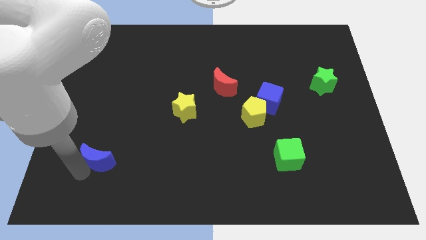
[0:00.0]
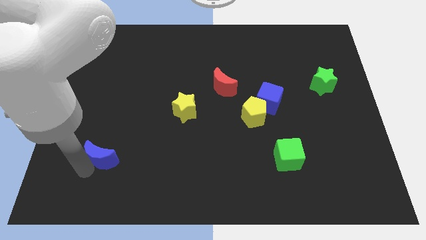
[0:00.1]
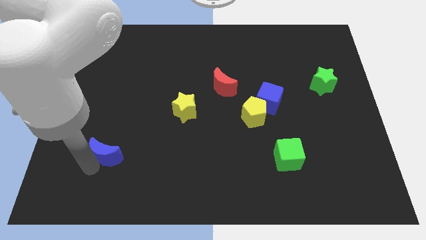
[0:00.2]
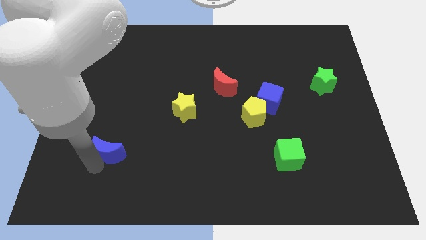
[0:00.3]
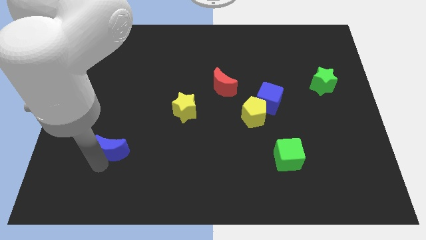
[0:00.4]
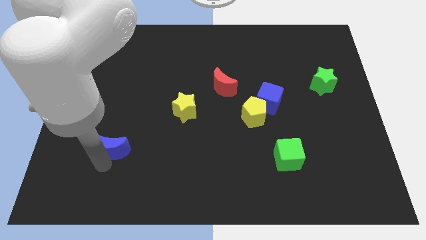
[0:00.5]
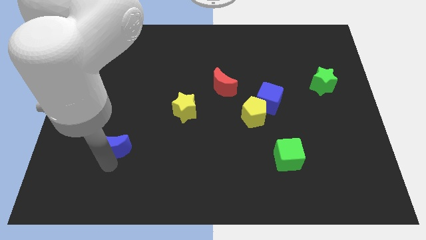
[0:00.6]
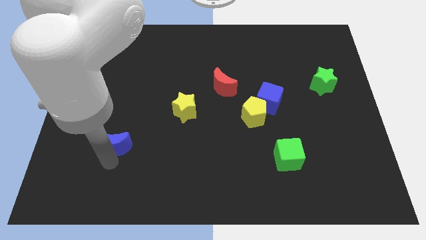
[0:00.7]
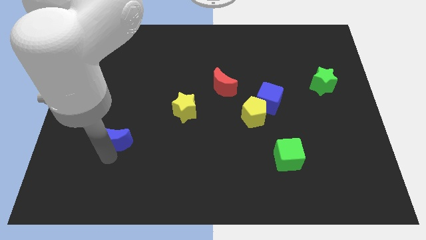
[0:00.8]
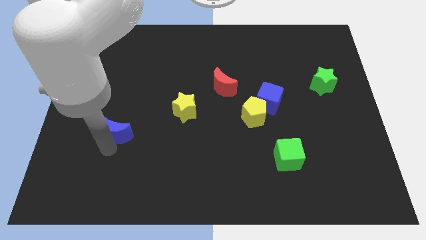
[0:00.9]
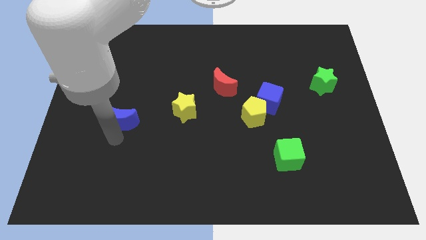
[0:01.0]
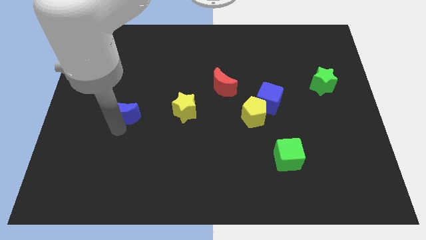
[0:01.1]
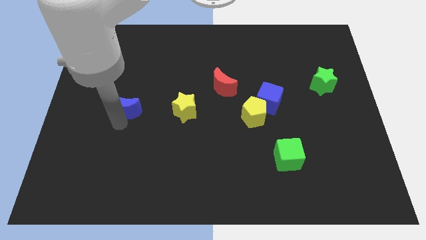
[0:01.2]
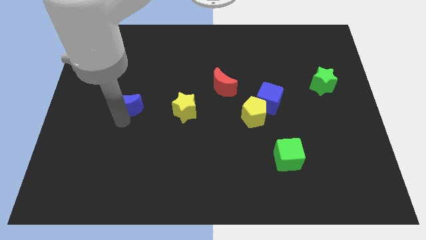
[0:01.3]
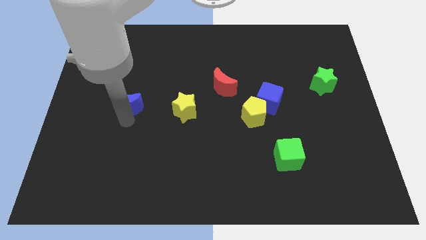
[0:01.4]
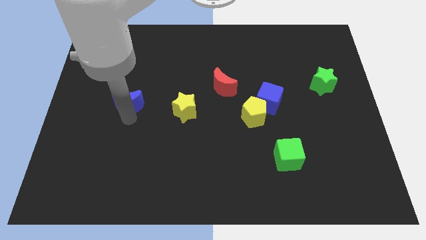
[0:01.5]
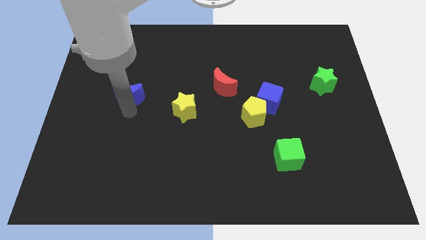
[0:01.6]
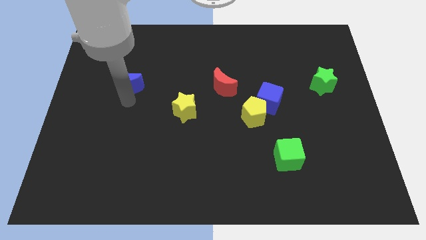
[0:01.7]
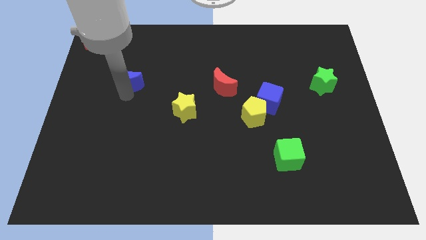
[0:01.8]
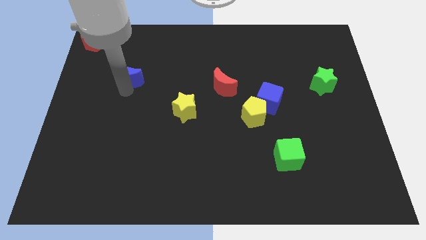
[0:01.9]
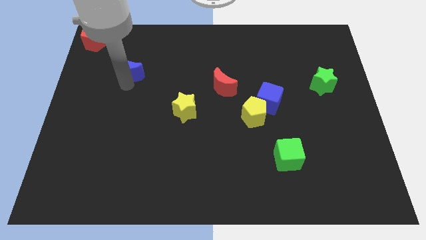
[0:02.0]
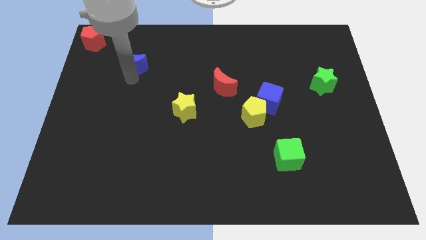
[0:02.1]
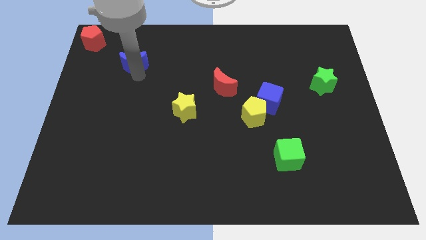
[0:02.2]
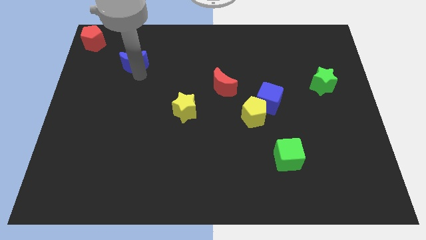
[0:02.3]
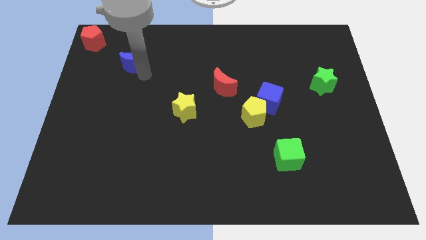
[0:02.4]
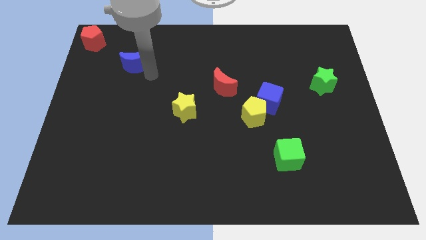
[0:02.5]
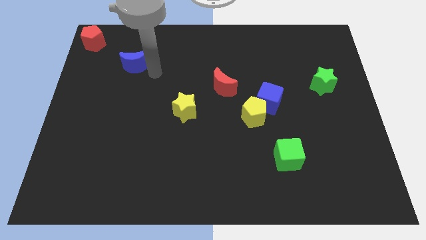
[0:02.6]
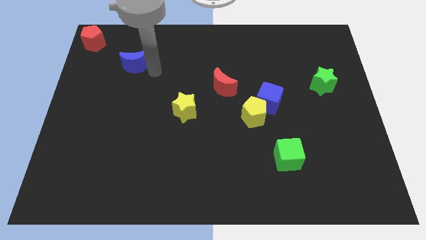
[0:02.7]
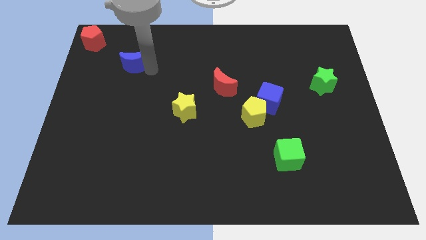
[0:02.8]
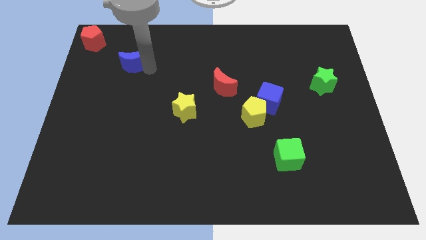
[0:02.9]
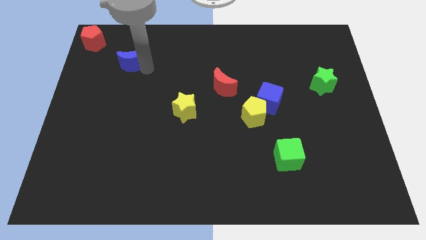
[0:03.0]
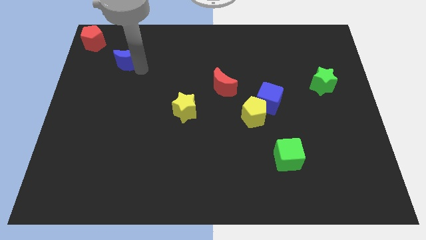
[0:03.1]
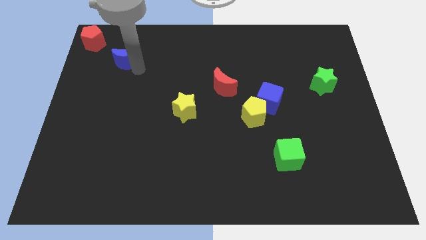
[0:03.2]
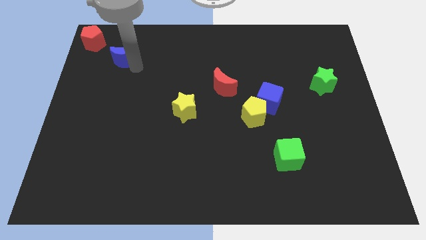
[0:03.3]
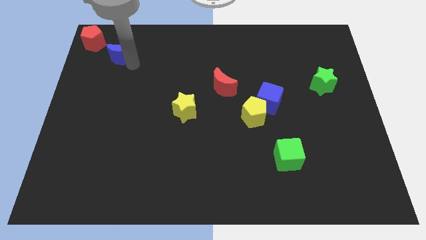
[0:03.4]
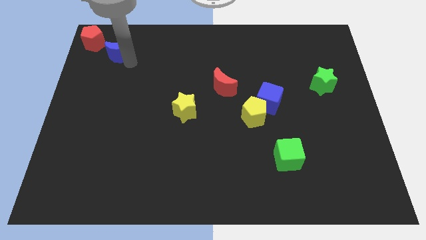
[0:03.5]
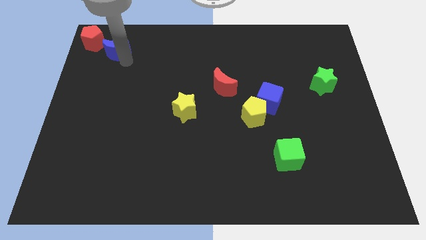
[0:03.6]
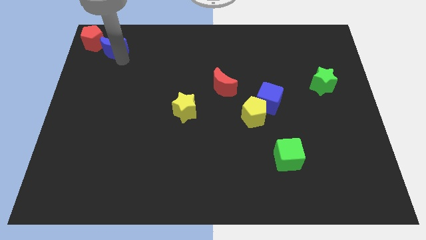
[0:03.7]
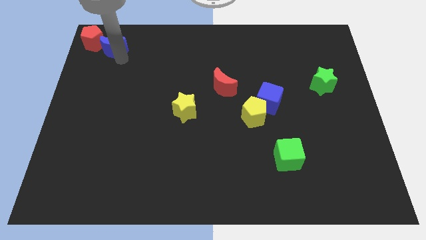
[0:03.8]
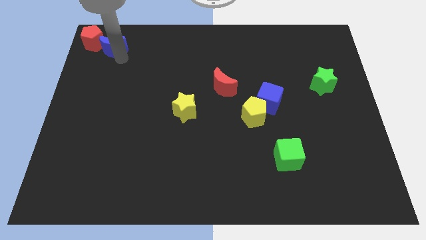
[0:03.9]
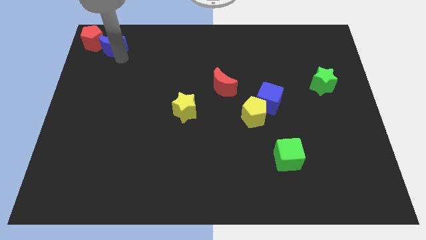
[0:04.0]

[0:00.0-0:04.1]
place blue moon to the bottom right of the red pentagon

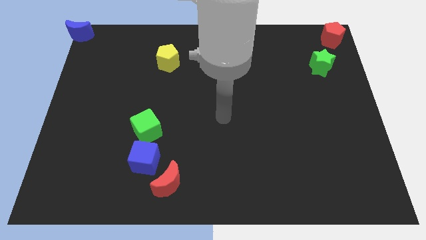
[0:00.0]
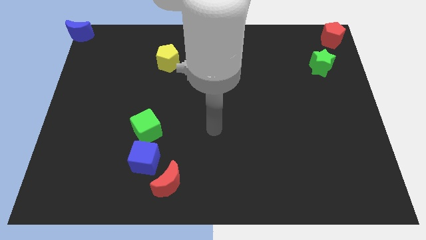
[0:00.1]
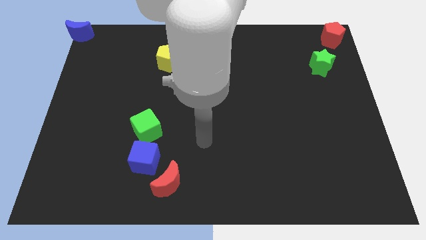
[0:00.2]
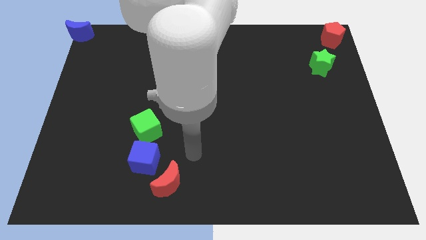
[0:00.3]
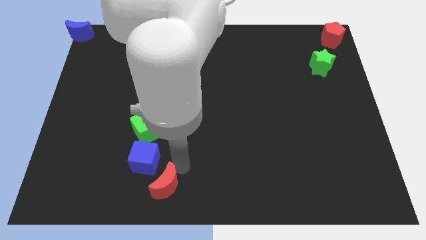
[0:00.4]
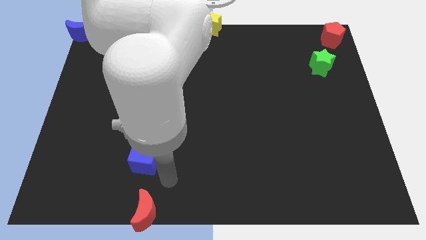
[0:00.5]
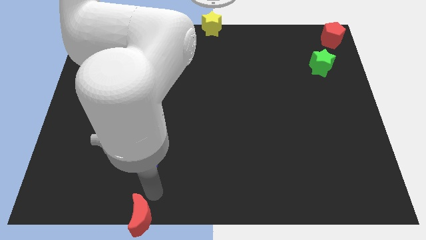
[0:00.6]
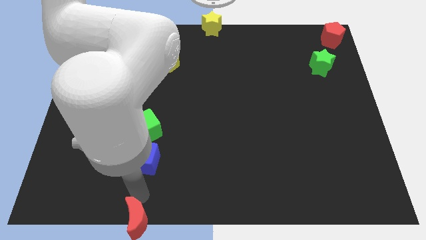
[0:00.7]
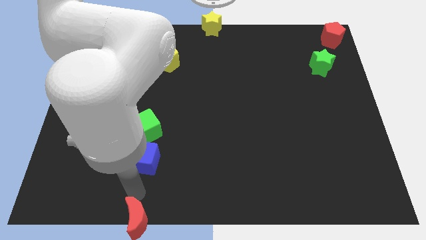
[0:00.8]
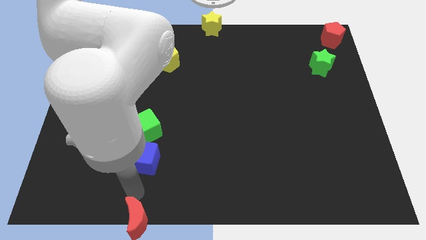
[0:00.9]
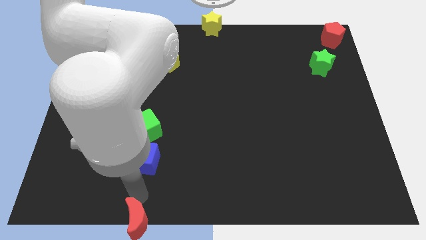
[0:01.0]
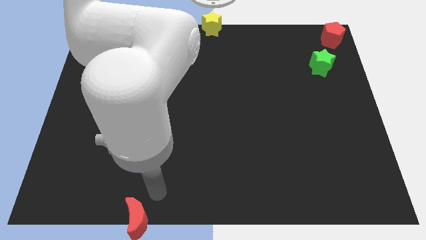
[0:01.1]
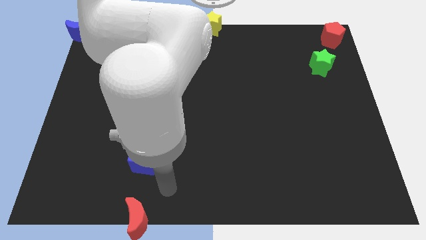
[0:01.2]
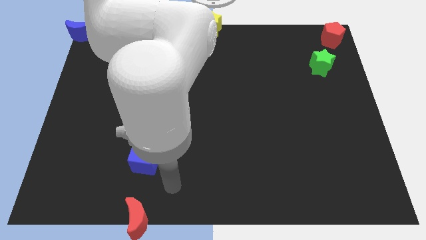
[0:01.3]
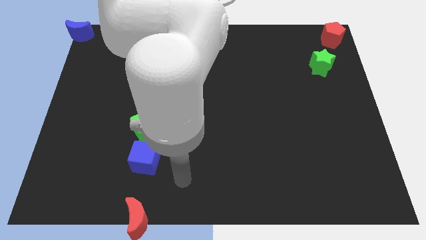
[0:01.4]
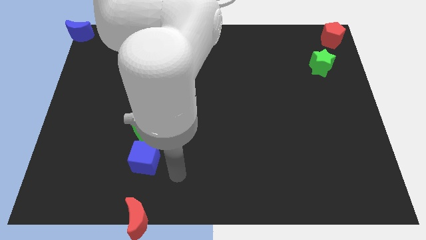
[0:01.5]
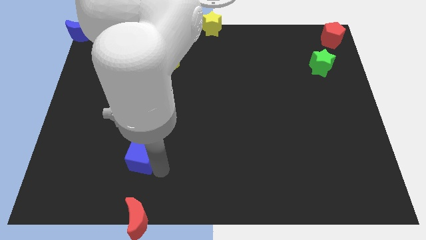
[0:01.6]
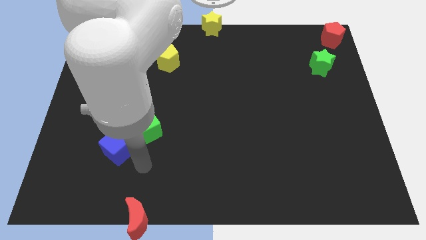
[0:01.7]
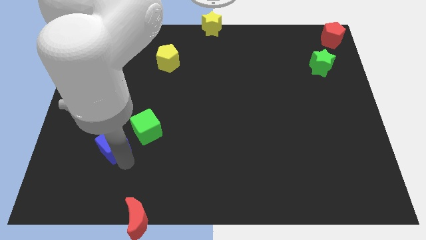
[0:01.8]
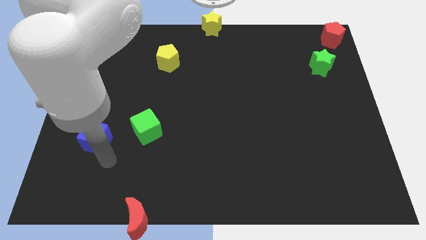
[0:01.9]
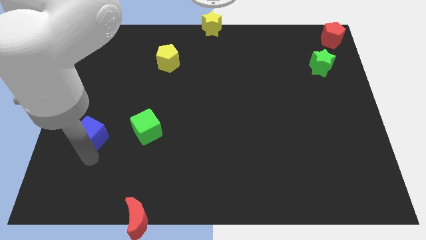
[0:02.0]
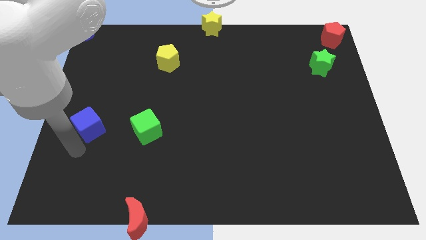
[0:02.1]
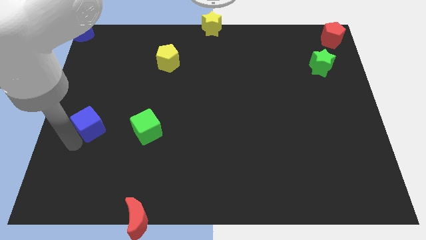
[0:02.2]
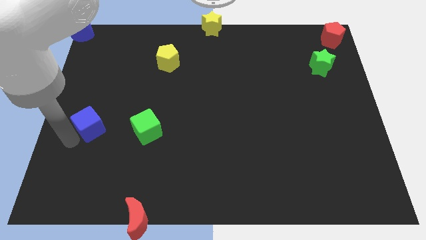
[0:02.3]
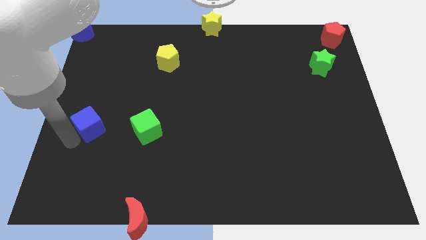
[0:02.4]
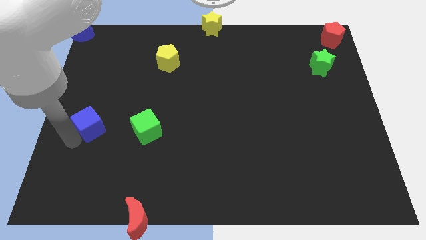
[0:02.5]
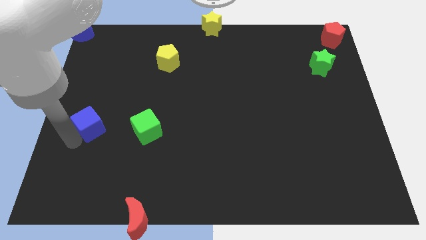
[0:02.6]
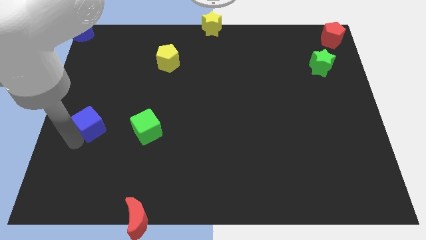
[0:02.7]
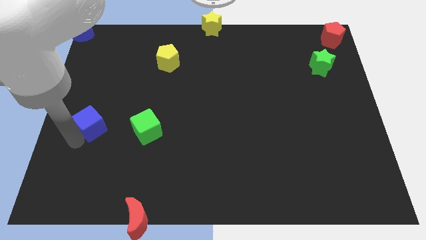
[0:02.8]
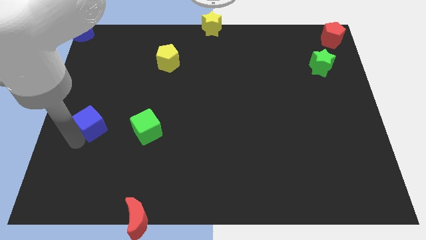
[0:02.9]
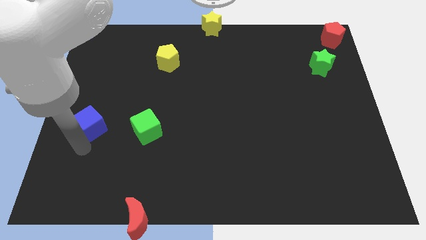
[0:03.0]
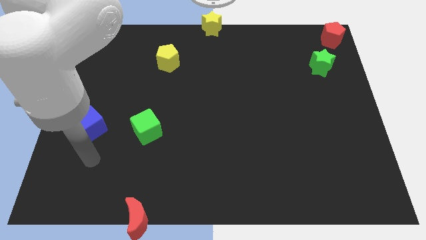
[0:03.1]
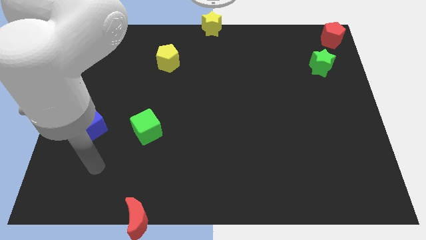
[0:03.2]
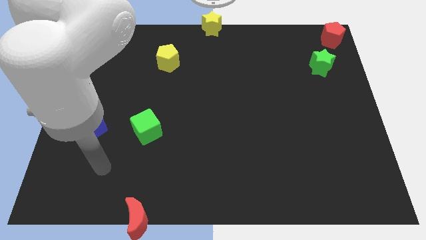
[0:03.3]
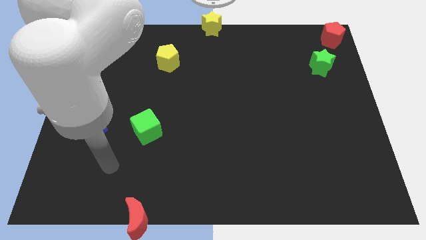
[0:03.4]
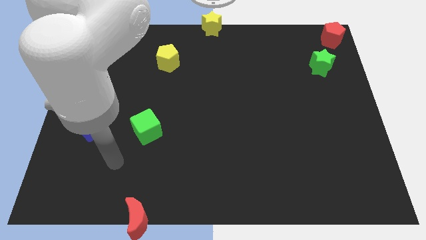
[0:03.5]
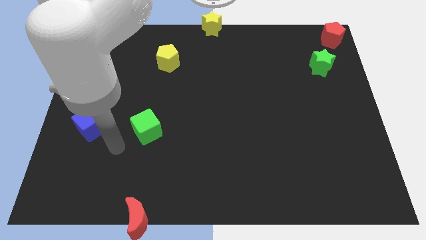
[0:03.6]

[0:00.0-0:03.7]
move the red crescent and blue cube diagonal to each other

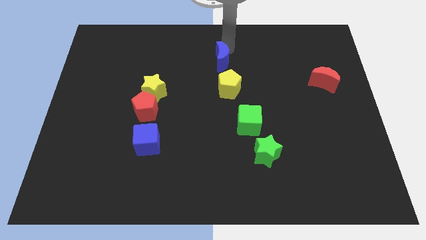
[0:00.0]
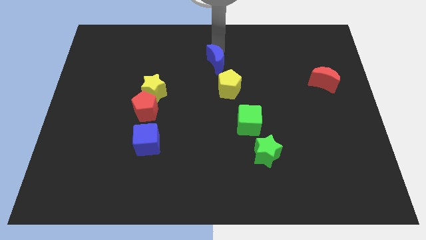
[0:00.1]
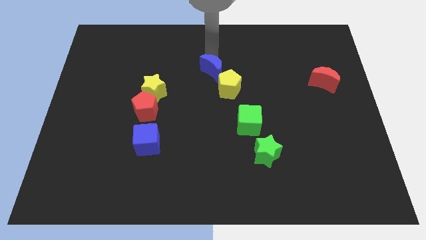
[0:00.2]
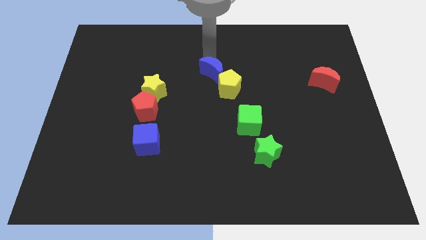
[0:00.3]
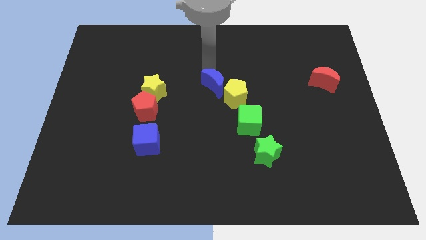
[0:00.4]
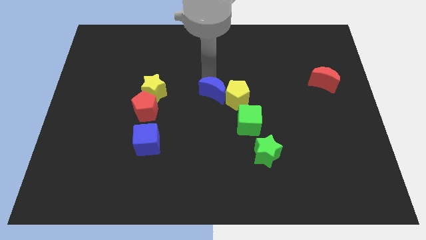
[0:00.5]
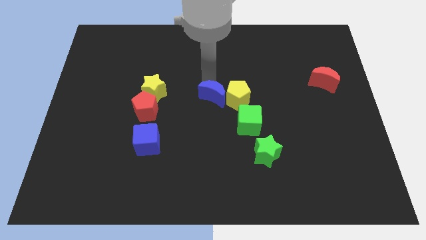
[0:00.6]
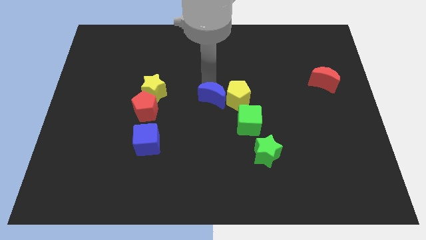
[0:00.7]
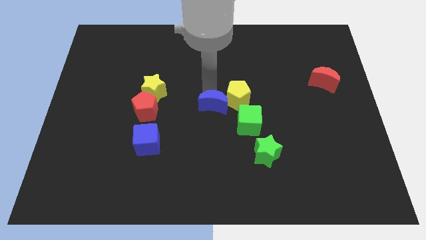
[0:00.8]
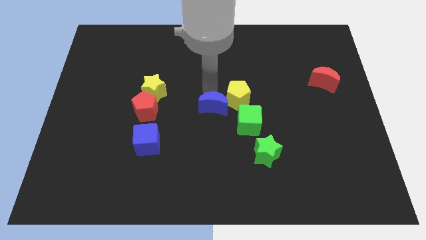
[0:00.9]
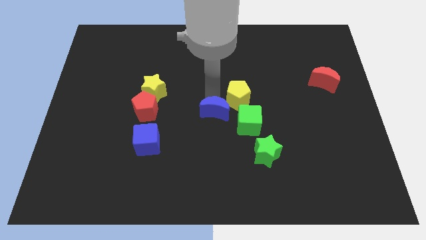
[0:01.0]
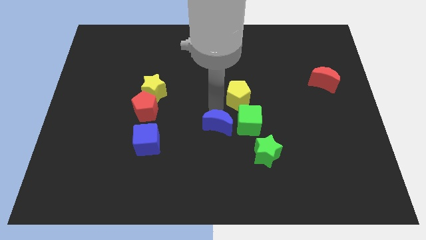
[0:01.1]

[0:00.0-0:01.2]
push the blue moon to the left side of the green cube
